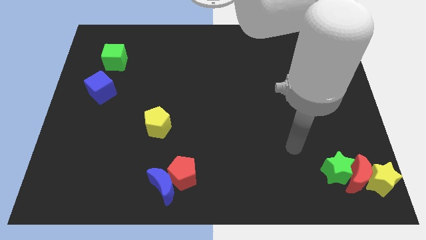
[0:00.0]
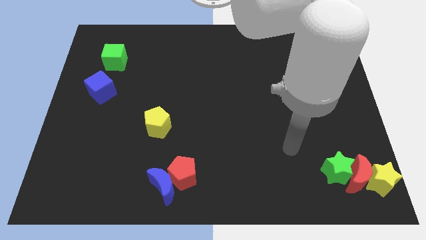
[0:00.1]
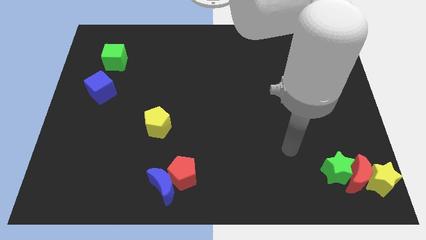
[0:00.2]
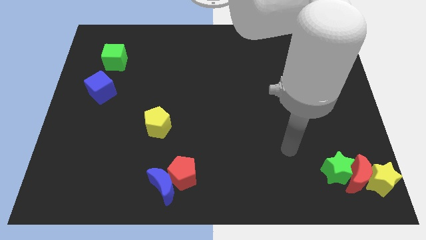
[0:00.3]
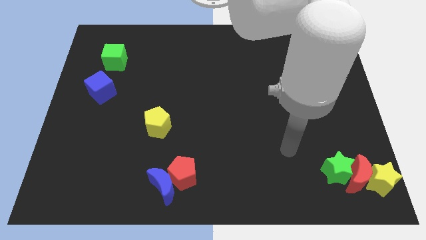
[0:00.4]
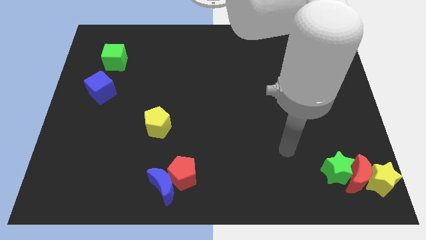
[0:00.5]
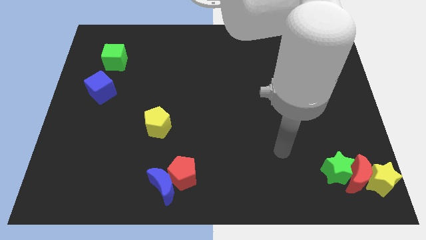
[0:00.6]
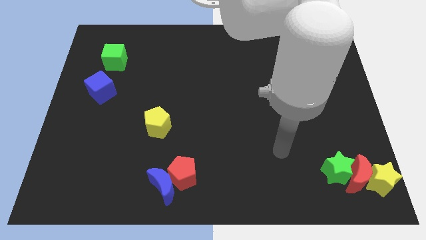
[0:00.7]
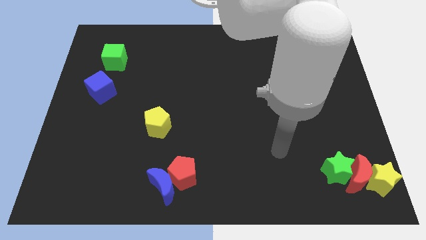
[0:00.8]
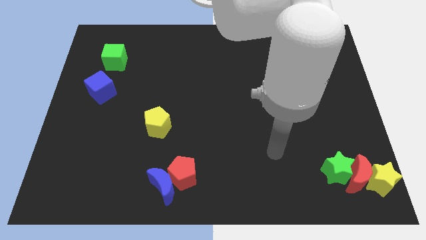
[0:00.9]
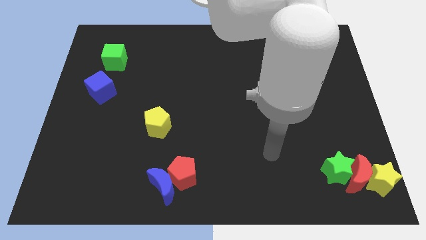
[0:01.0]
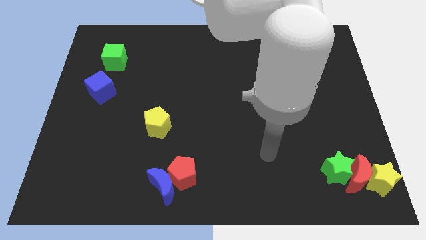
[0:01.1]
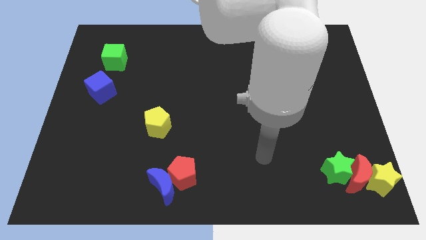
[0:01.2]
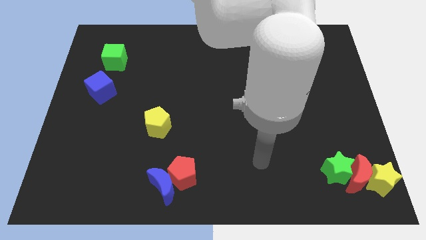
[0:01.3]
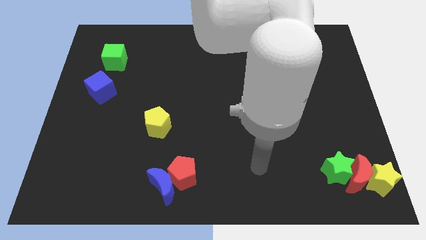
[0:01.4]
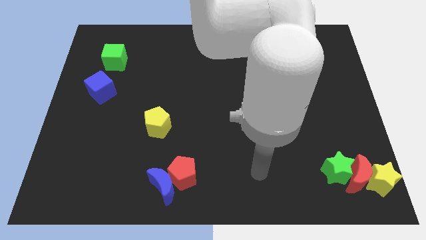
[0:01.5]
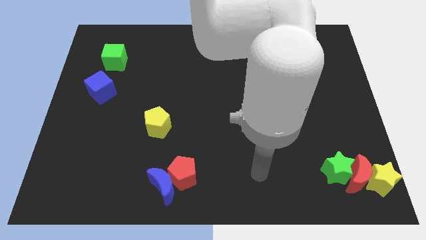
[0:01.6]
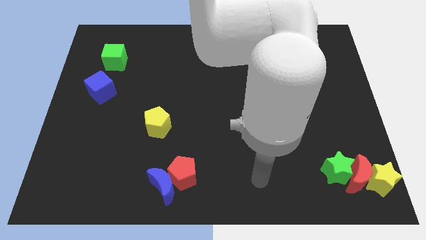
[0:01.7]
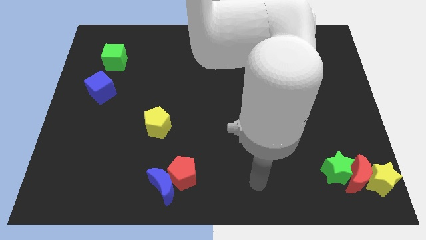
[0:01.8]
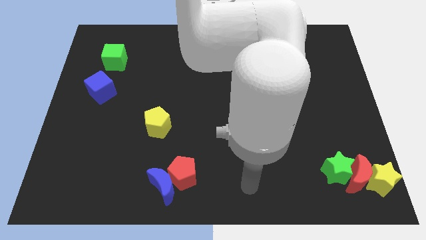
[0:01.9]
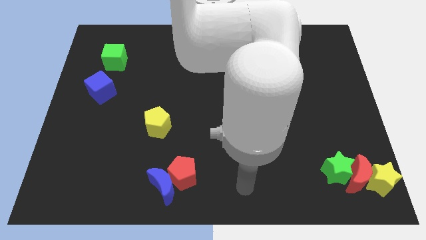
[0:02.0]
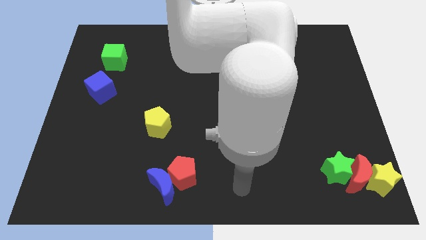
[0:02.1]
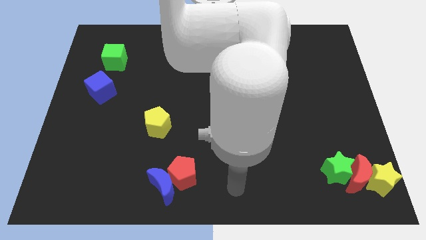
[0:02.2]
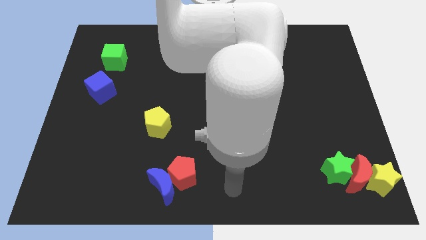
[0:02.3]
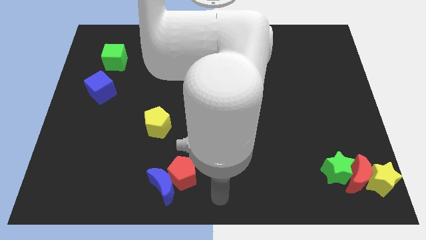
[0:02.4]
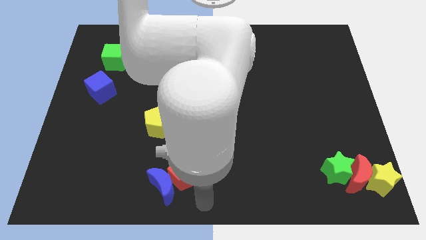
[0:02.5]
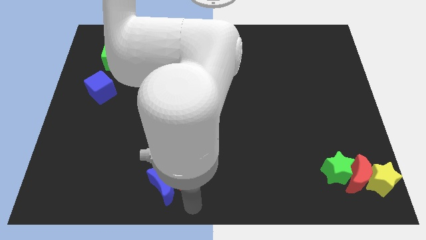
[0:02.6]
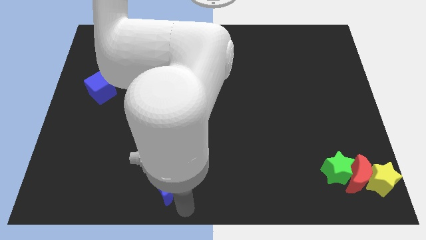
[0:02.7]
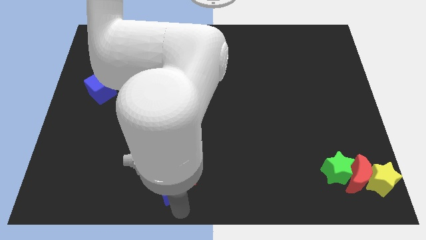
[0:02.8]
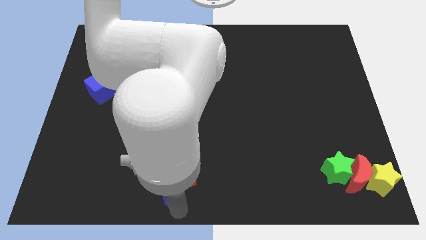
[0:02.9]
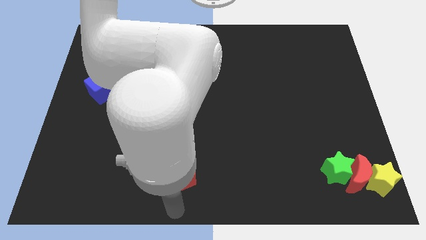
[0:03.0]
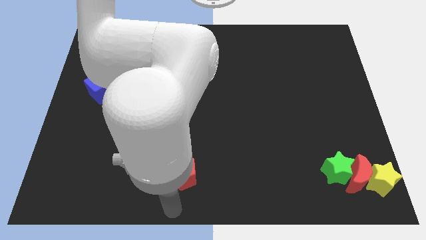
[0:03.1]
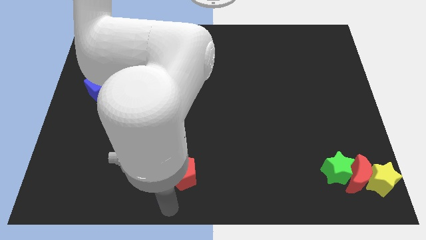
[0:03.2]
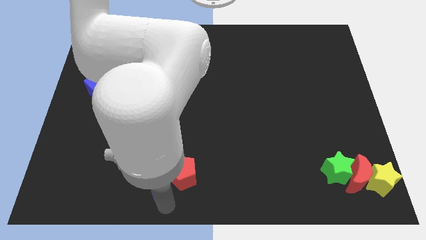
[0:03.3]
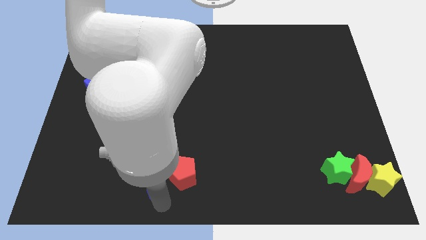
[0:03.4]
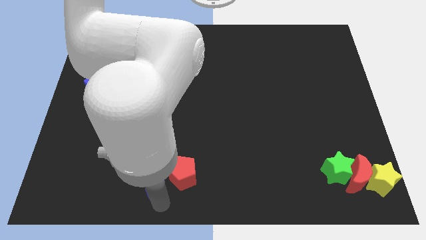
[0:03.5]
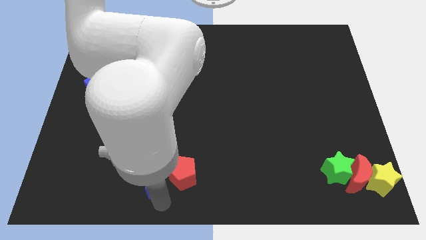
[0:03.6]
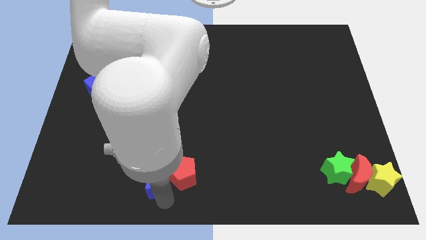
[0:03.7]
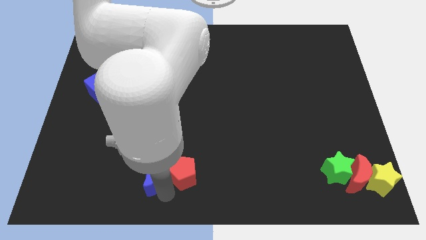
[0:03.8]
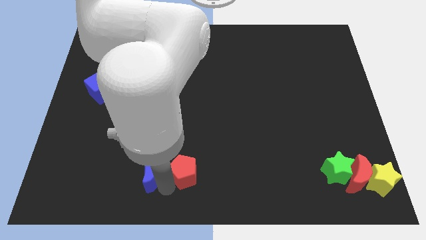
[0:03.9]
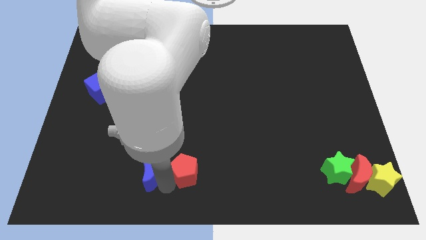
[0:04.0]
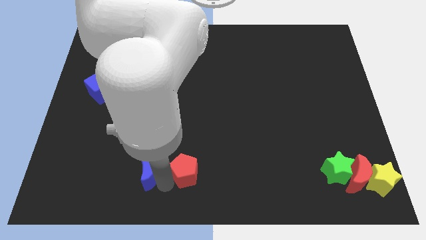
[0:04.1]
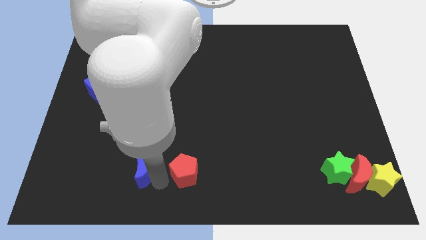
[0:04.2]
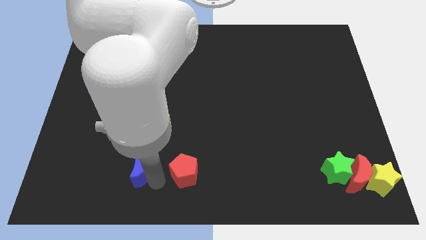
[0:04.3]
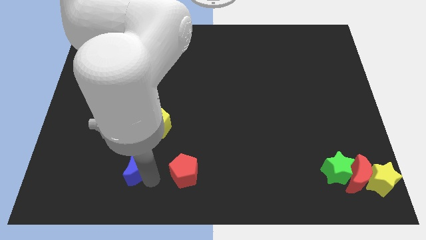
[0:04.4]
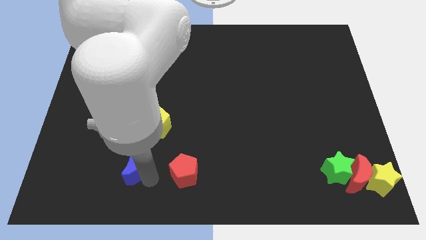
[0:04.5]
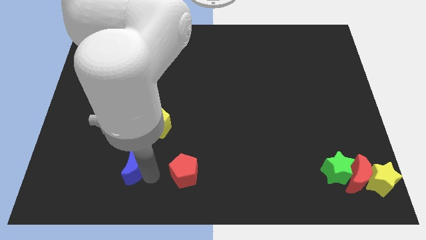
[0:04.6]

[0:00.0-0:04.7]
separate blue moon and red pentagon

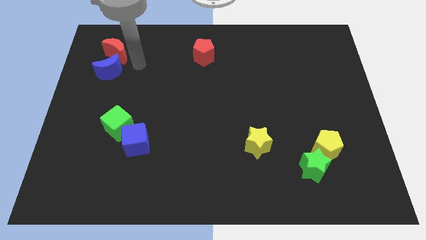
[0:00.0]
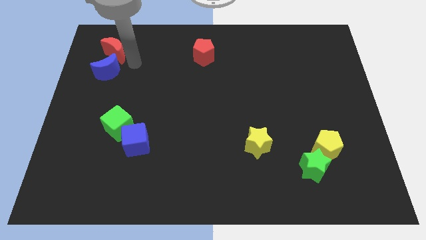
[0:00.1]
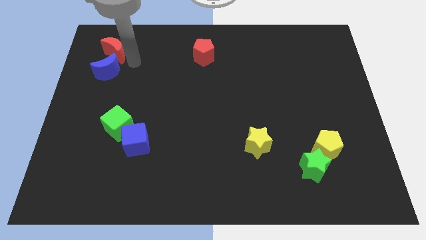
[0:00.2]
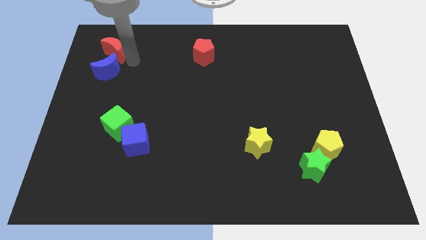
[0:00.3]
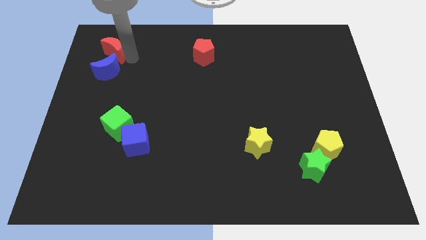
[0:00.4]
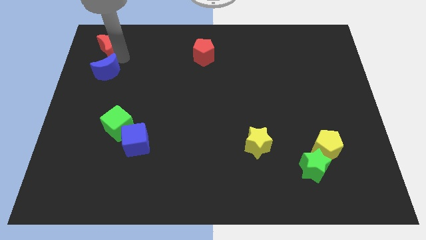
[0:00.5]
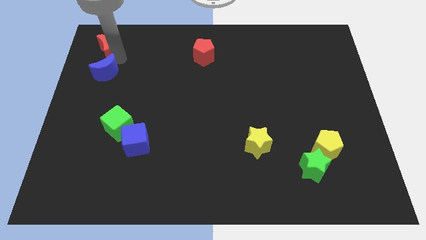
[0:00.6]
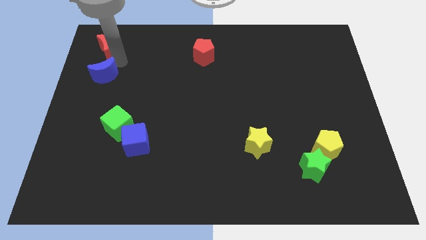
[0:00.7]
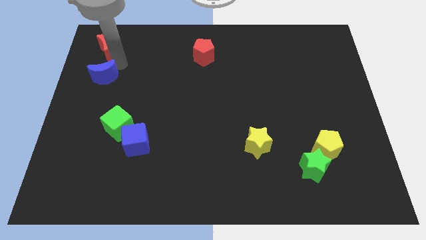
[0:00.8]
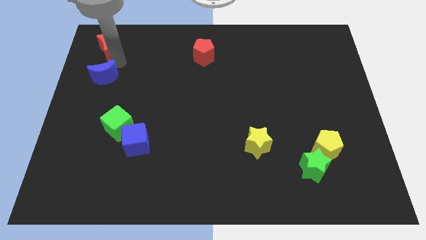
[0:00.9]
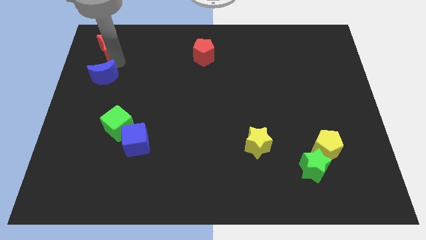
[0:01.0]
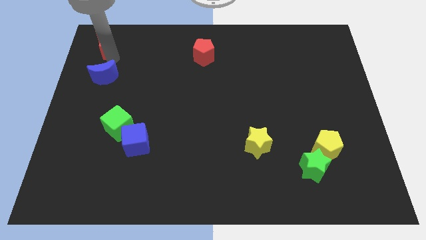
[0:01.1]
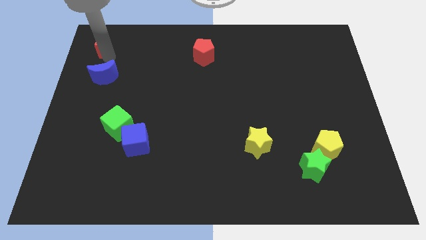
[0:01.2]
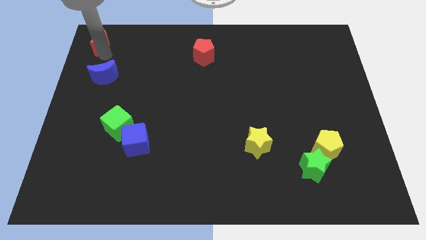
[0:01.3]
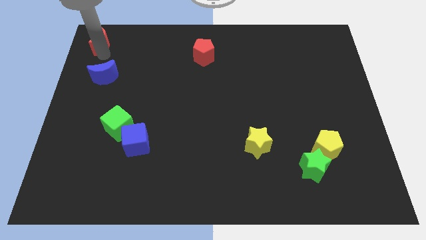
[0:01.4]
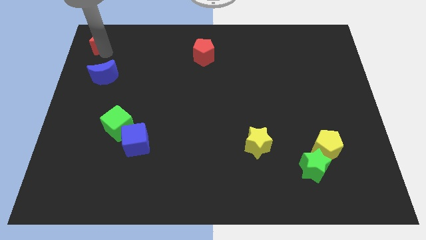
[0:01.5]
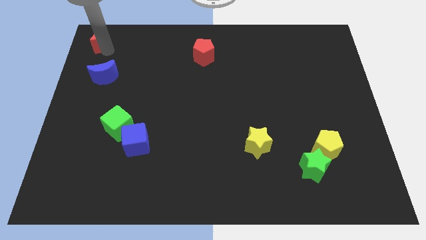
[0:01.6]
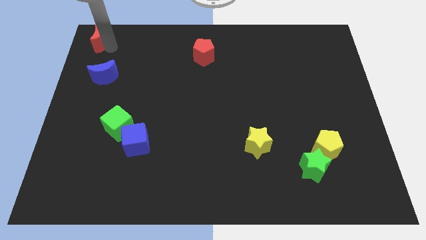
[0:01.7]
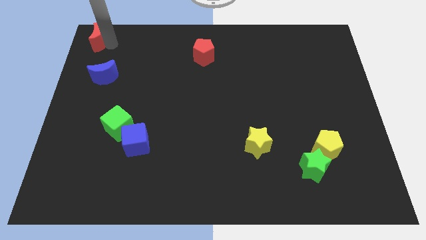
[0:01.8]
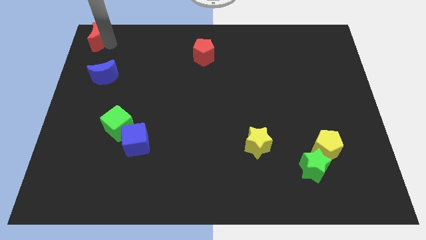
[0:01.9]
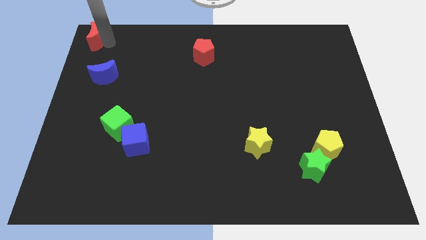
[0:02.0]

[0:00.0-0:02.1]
slide red moon to the top left corner

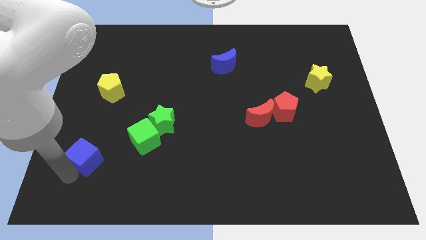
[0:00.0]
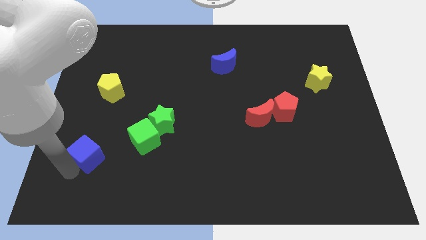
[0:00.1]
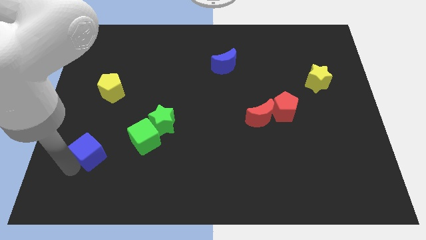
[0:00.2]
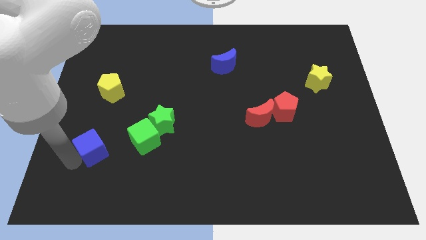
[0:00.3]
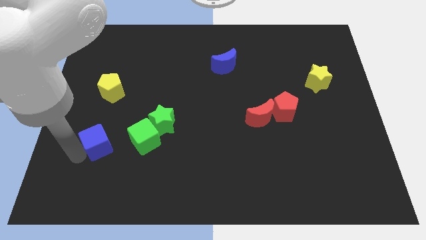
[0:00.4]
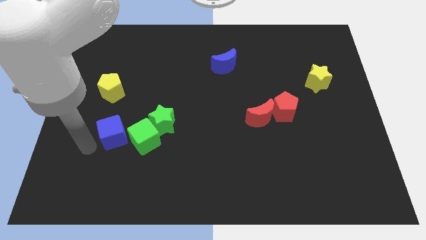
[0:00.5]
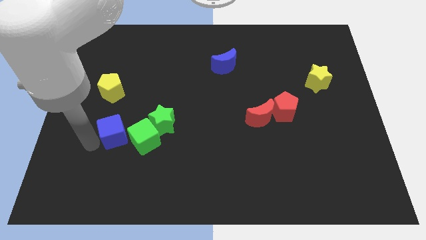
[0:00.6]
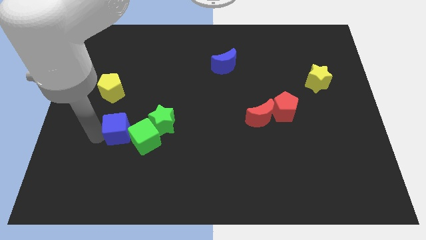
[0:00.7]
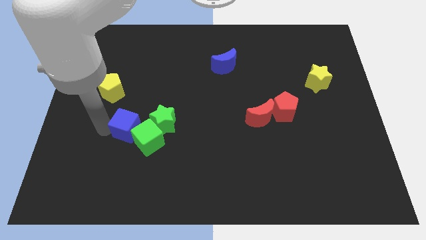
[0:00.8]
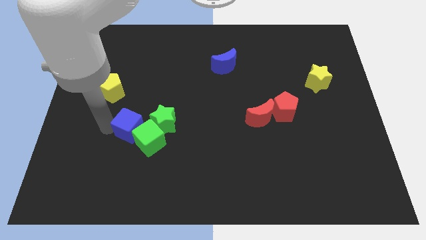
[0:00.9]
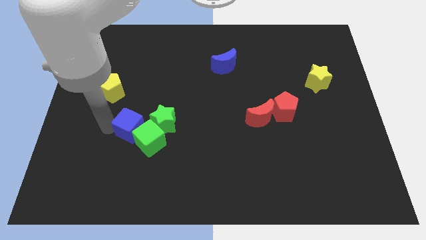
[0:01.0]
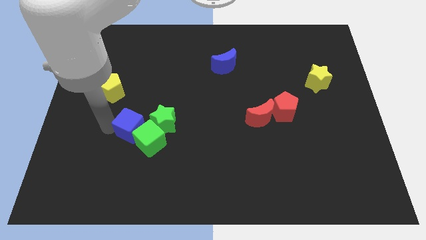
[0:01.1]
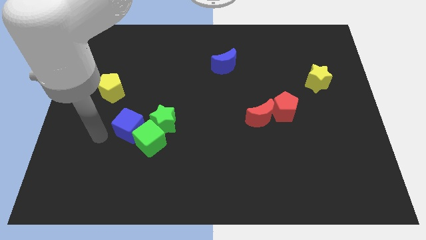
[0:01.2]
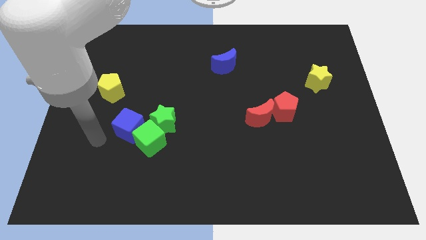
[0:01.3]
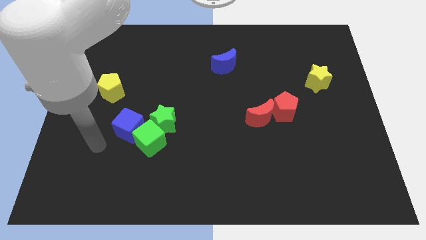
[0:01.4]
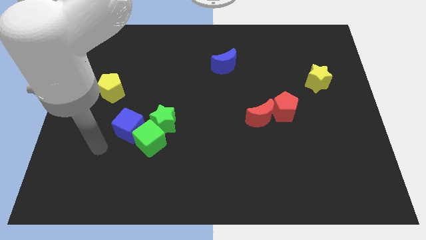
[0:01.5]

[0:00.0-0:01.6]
move the blue cube to the left side of the green cube

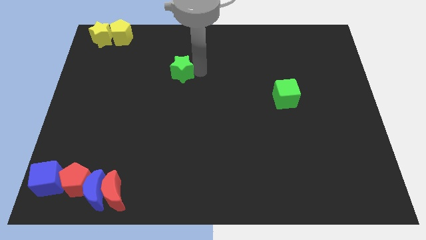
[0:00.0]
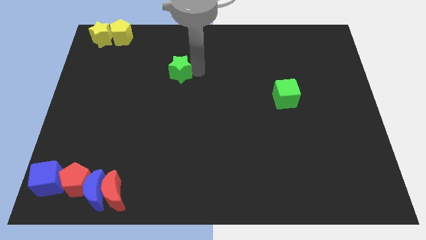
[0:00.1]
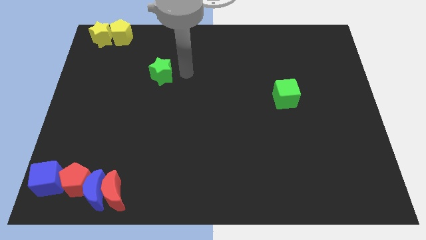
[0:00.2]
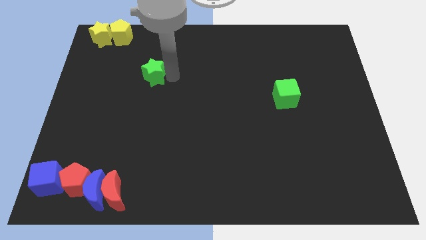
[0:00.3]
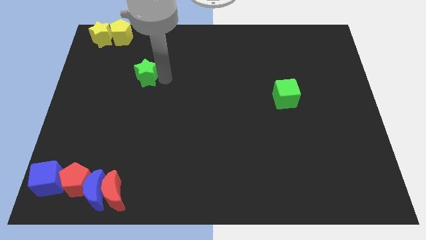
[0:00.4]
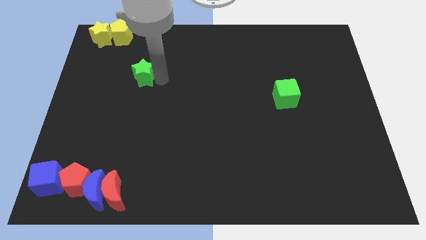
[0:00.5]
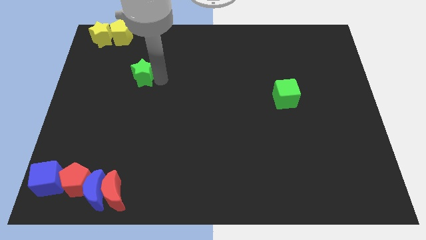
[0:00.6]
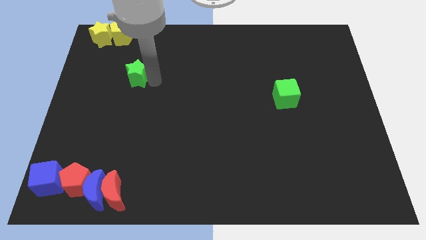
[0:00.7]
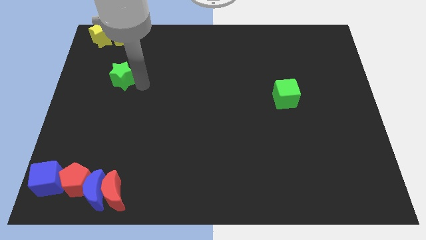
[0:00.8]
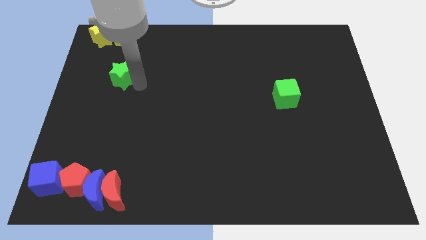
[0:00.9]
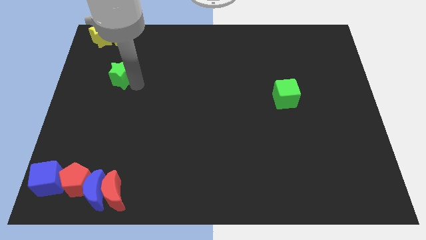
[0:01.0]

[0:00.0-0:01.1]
place the green star below the yellow pentagon
